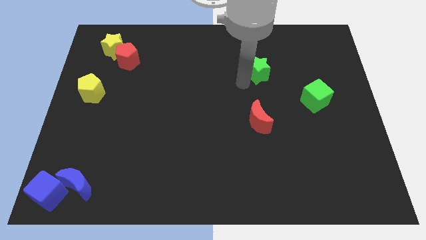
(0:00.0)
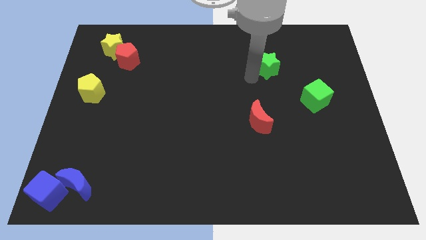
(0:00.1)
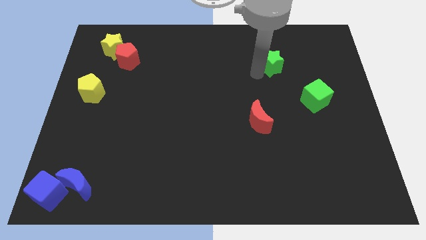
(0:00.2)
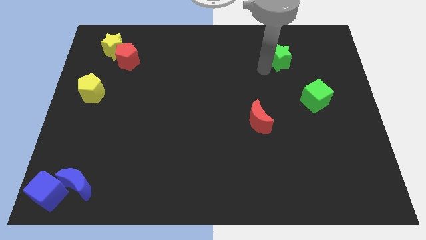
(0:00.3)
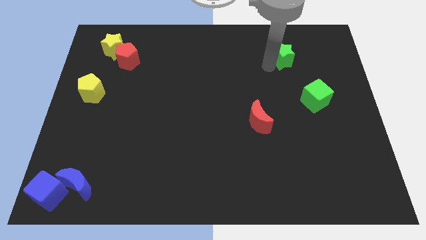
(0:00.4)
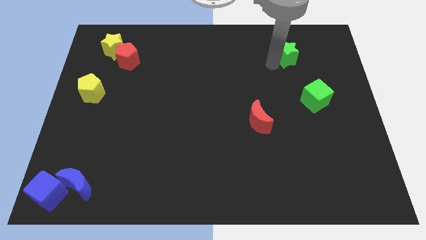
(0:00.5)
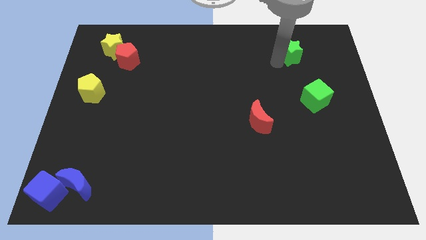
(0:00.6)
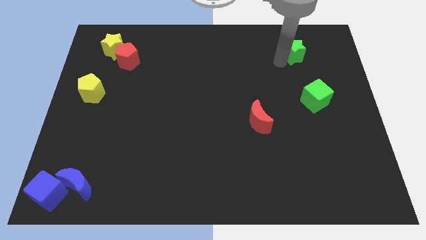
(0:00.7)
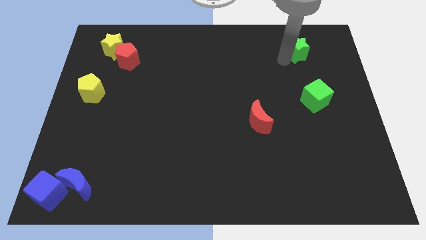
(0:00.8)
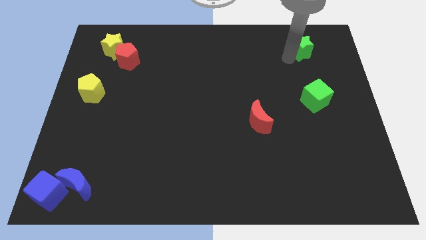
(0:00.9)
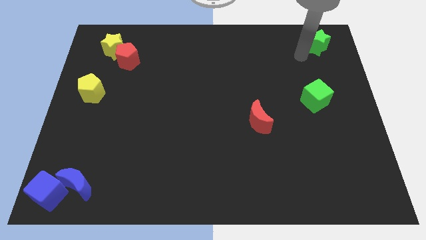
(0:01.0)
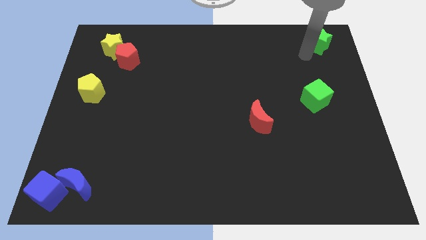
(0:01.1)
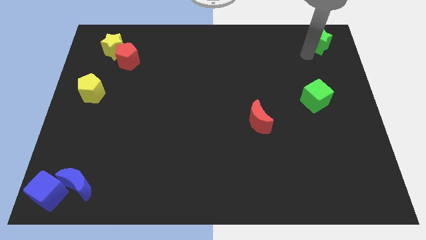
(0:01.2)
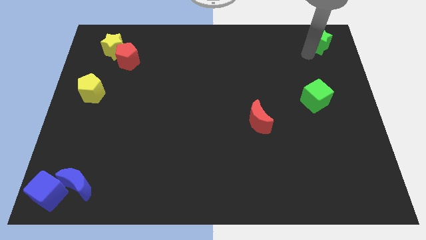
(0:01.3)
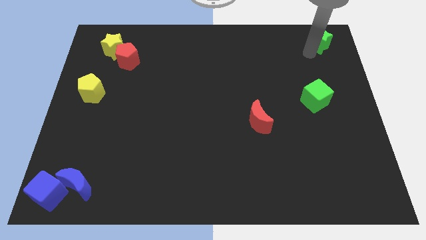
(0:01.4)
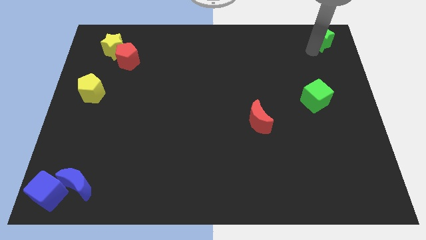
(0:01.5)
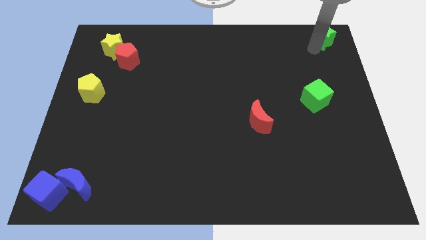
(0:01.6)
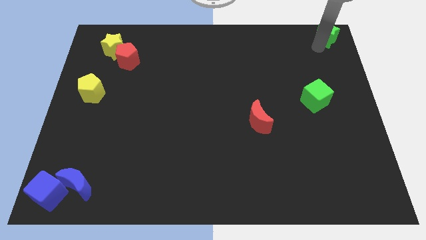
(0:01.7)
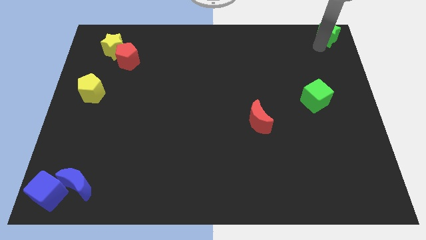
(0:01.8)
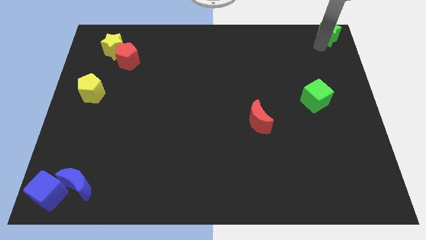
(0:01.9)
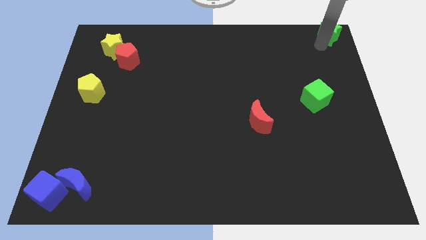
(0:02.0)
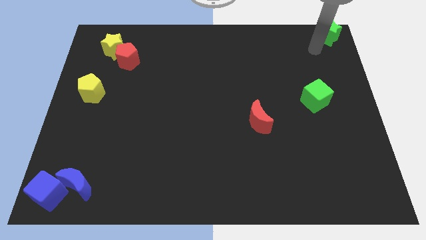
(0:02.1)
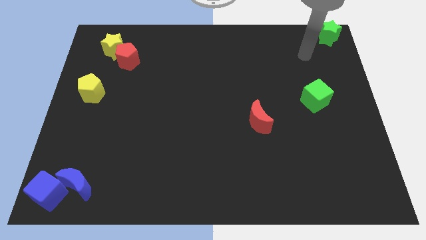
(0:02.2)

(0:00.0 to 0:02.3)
take the green star to the top right corner of the board

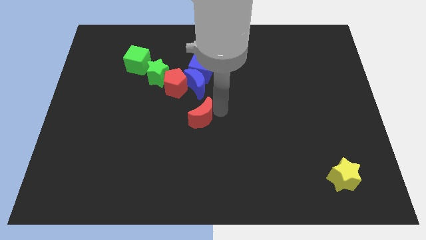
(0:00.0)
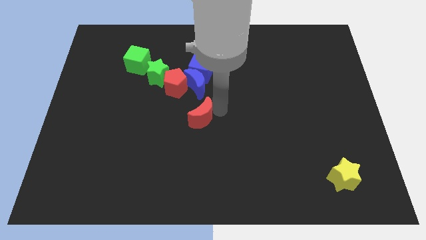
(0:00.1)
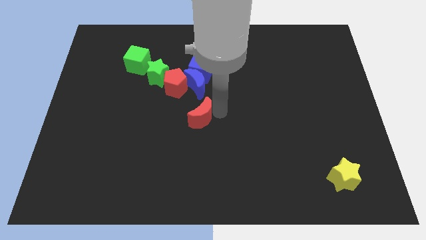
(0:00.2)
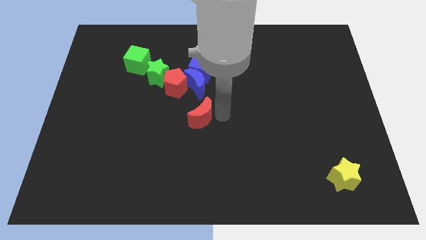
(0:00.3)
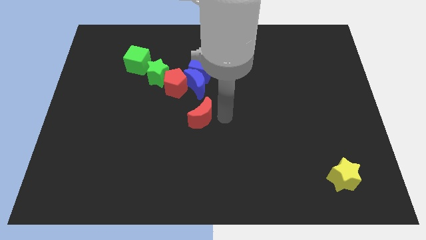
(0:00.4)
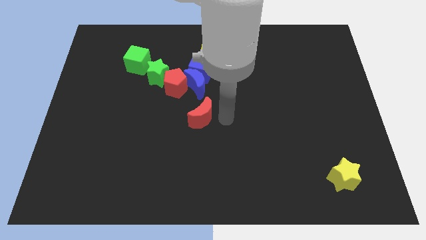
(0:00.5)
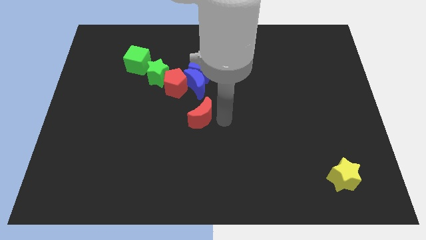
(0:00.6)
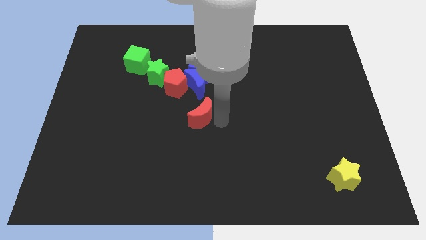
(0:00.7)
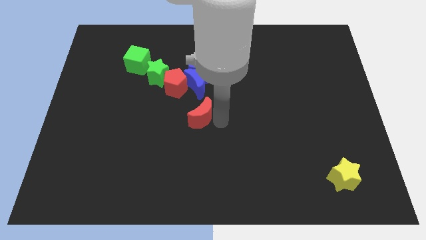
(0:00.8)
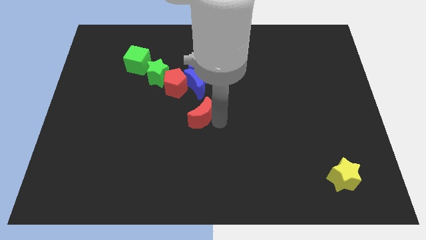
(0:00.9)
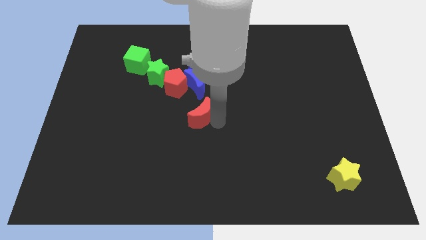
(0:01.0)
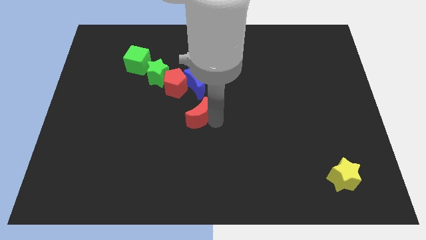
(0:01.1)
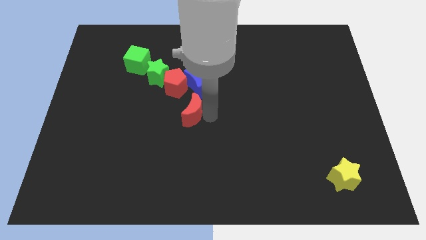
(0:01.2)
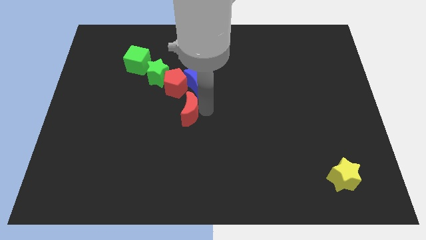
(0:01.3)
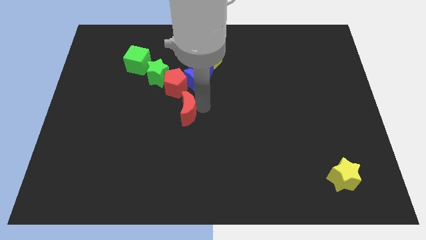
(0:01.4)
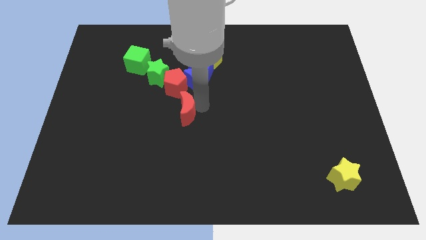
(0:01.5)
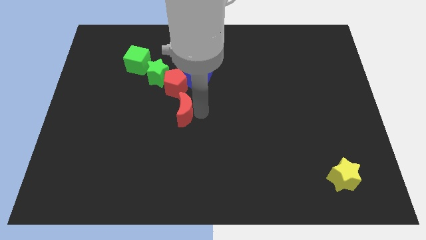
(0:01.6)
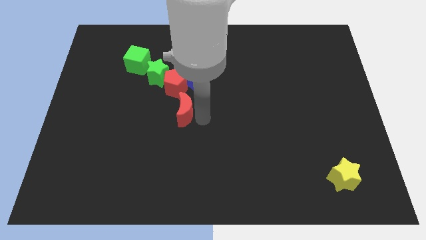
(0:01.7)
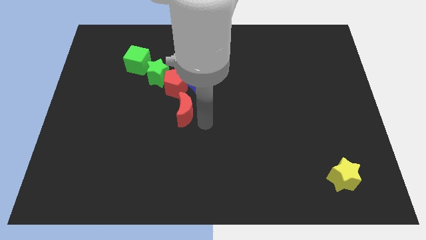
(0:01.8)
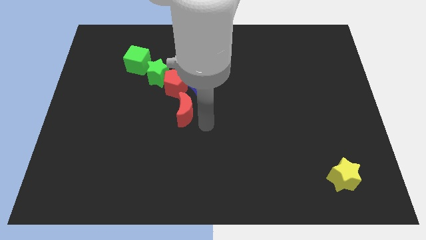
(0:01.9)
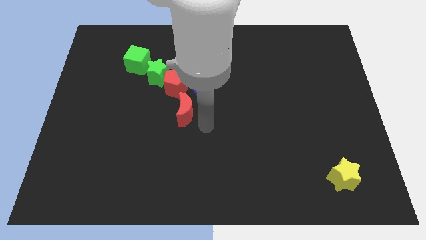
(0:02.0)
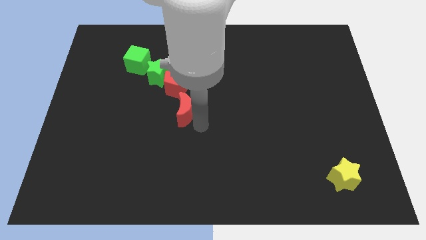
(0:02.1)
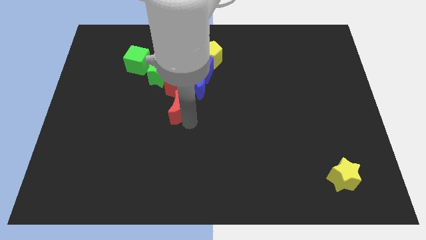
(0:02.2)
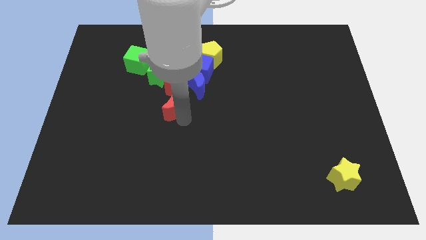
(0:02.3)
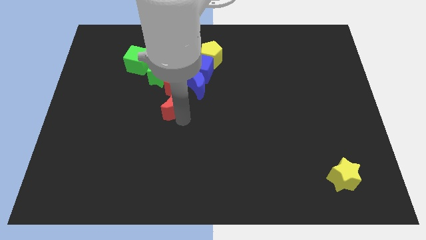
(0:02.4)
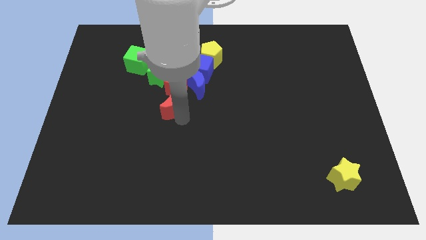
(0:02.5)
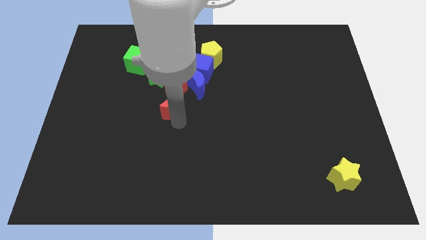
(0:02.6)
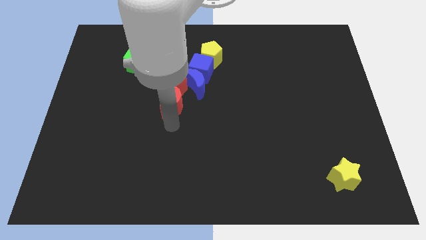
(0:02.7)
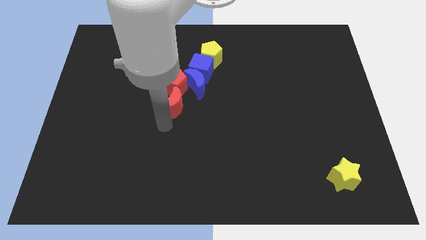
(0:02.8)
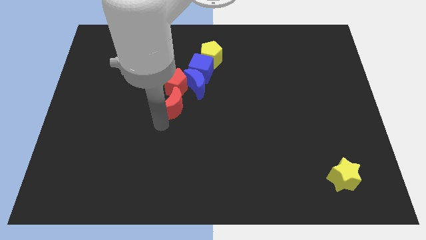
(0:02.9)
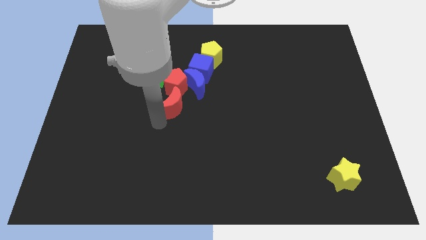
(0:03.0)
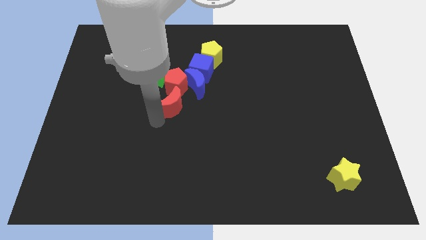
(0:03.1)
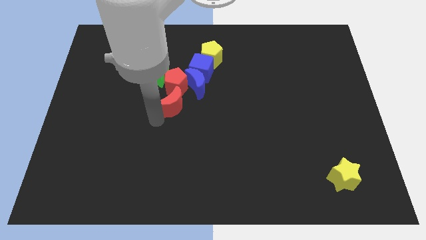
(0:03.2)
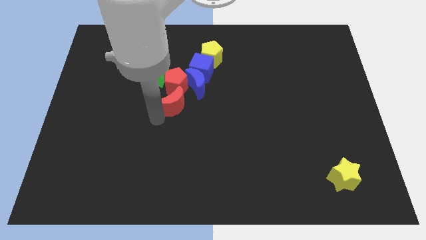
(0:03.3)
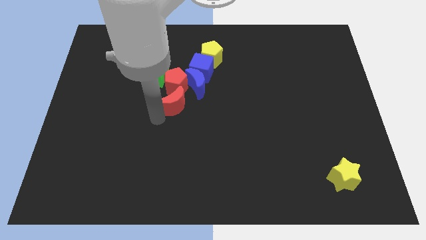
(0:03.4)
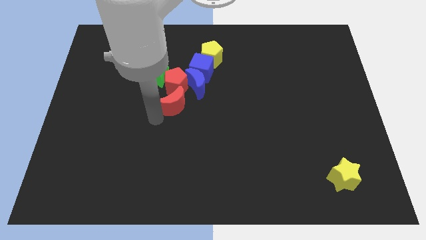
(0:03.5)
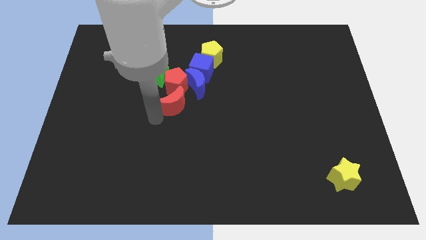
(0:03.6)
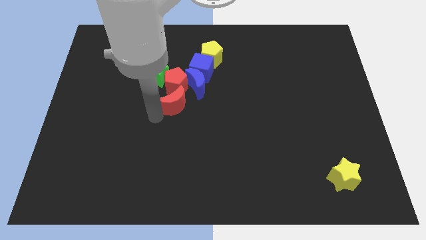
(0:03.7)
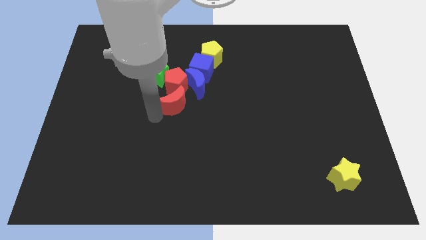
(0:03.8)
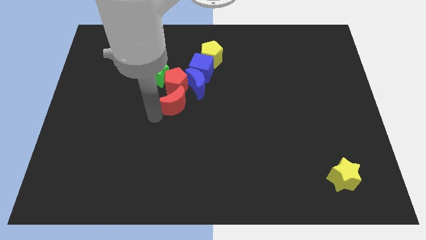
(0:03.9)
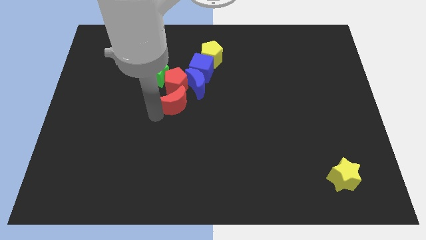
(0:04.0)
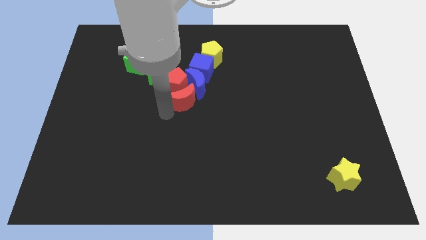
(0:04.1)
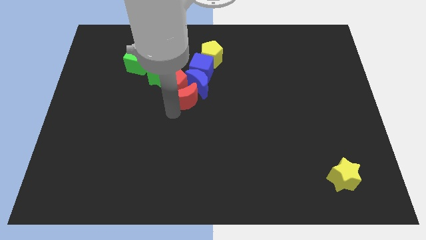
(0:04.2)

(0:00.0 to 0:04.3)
move red crescent below the red pentagon

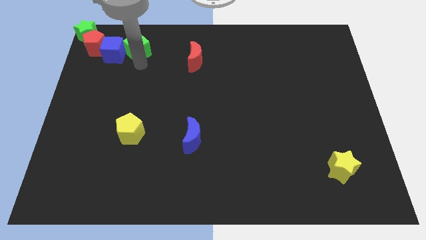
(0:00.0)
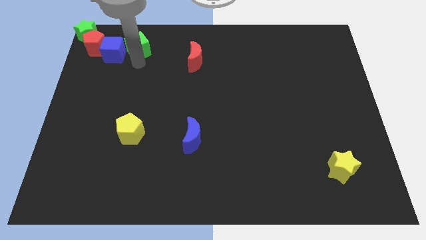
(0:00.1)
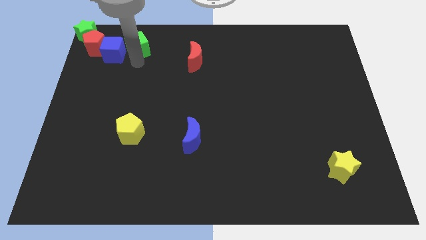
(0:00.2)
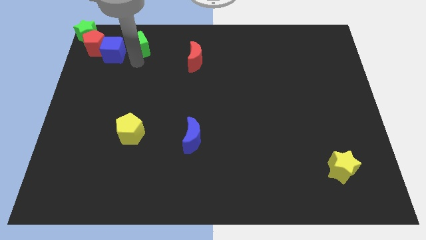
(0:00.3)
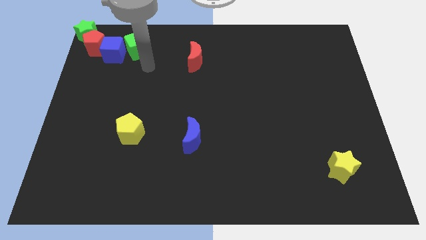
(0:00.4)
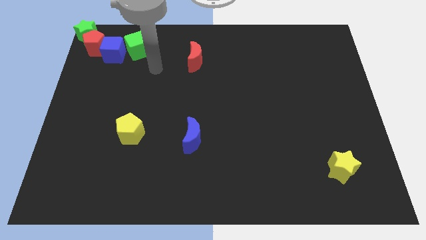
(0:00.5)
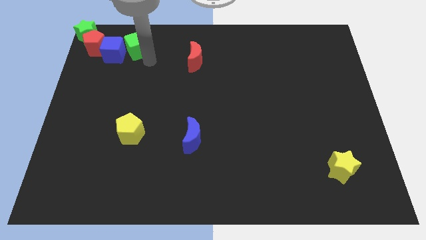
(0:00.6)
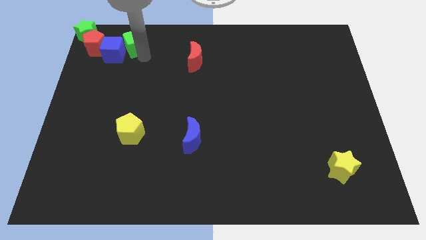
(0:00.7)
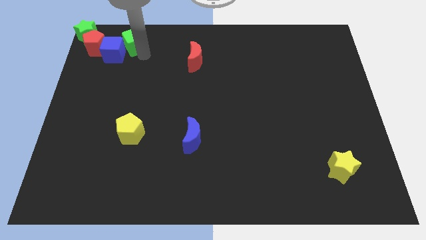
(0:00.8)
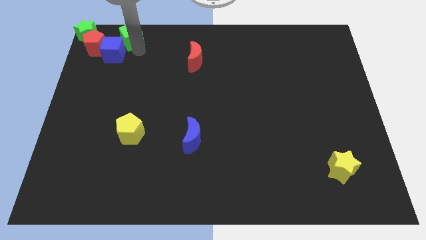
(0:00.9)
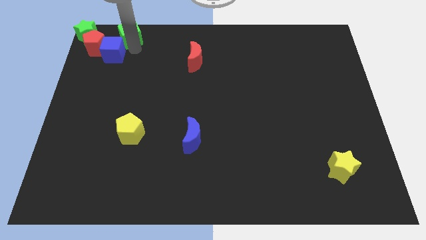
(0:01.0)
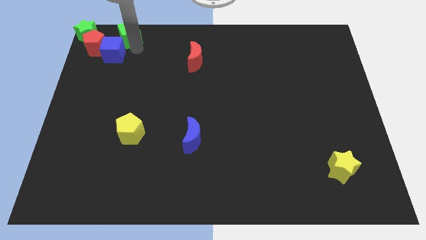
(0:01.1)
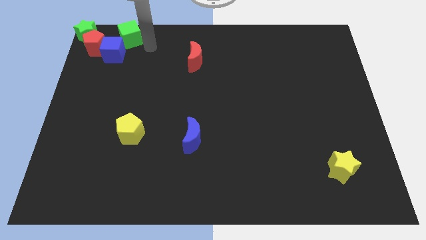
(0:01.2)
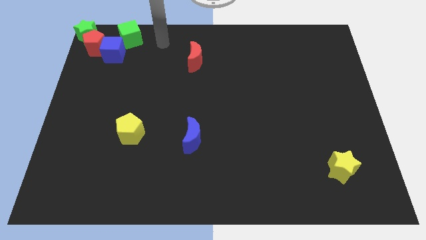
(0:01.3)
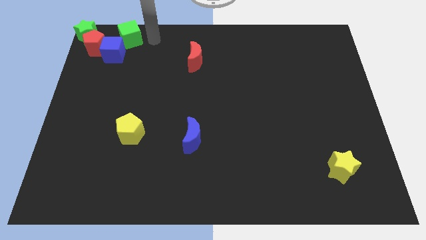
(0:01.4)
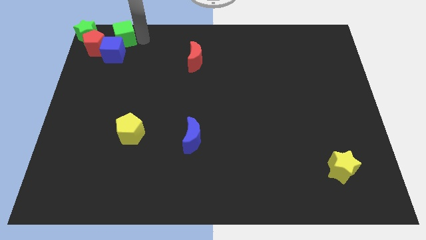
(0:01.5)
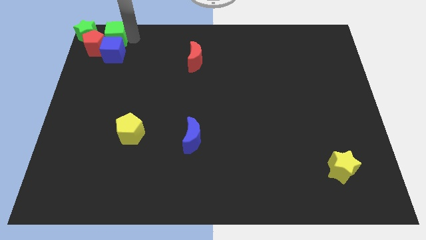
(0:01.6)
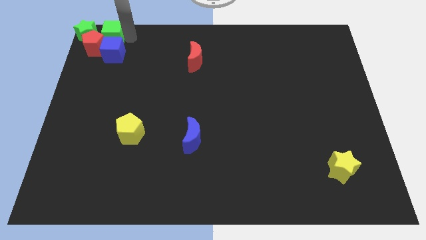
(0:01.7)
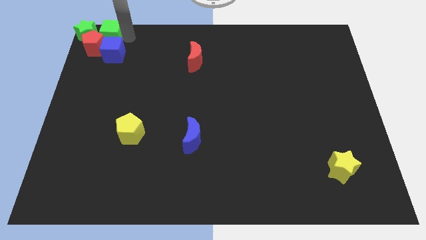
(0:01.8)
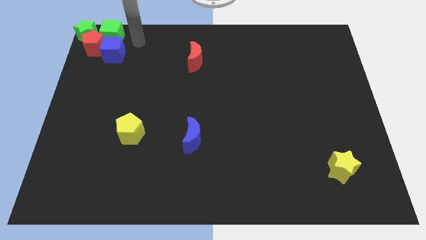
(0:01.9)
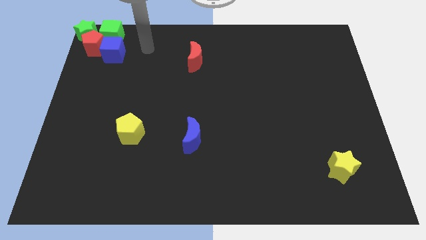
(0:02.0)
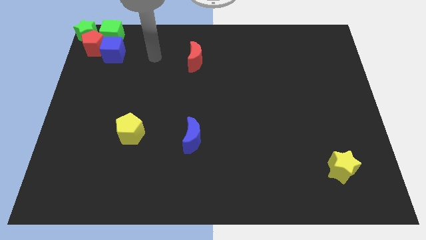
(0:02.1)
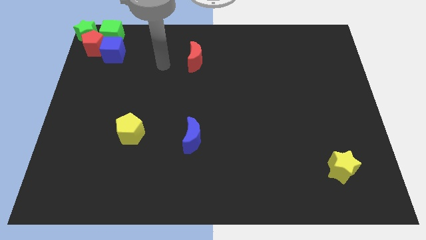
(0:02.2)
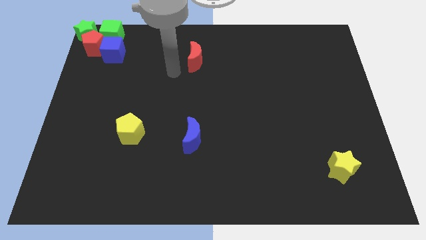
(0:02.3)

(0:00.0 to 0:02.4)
place the green cube right to the green star
